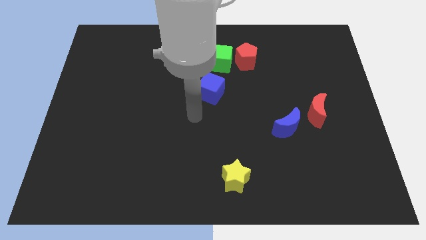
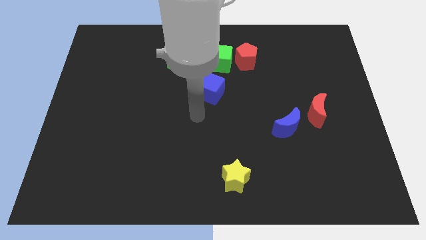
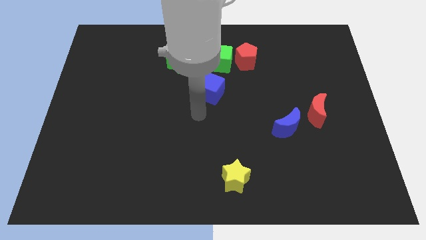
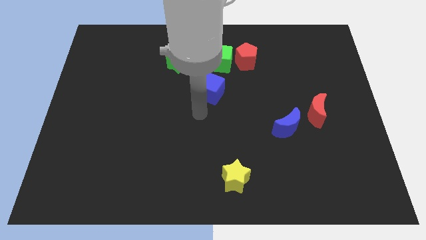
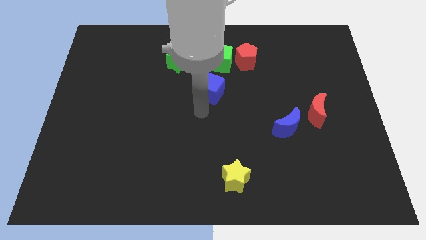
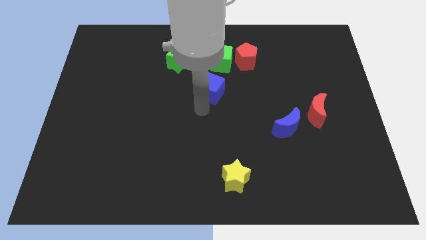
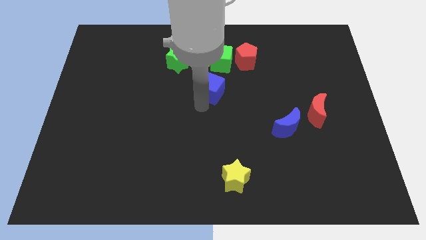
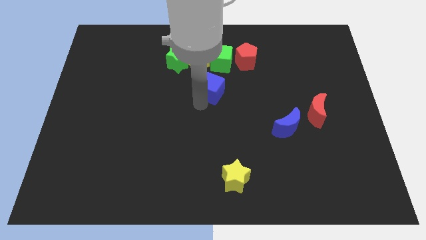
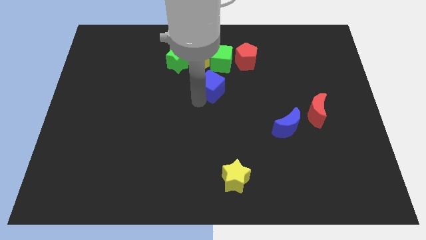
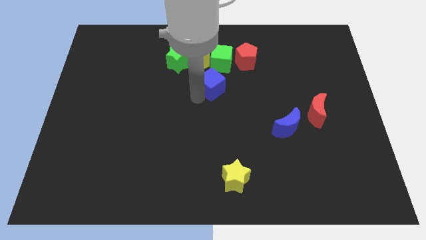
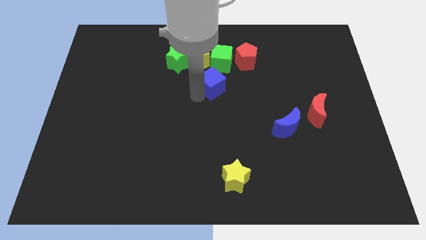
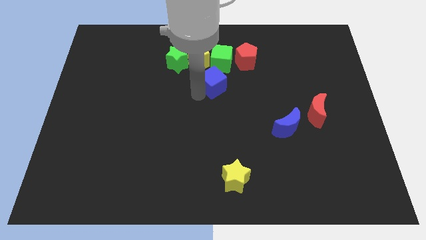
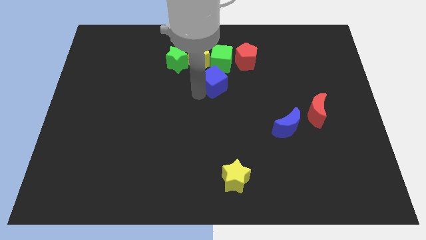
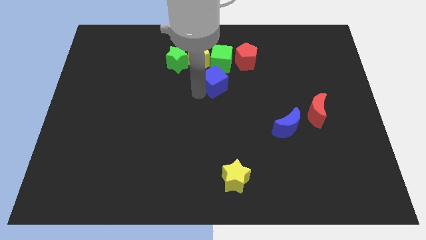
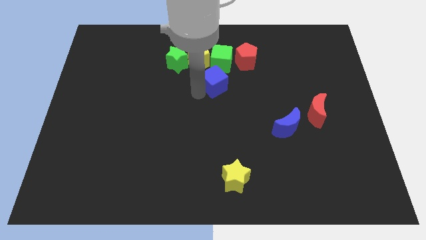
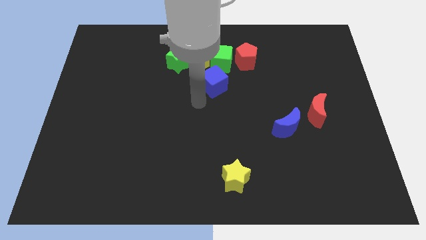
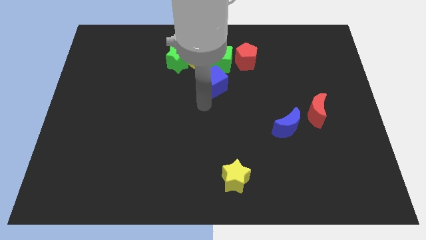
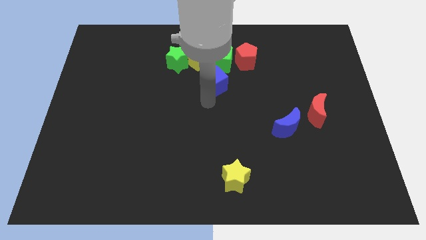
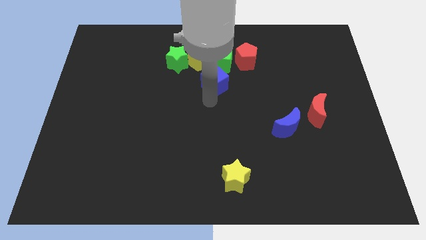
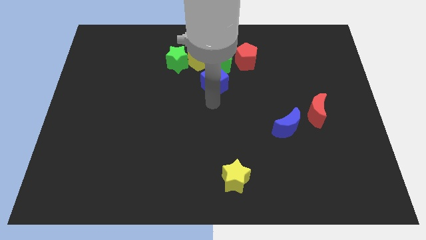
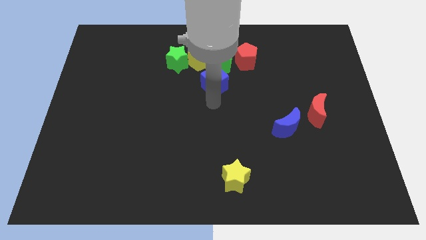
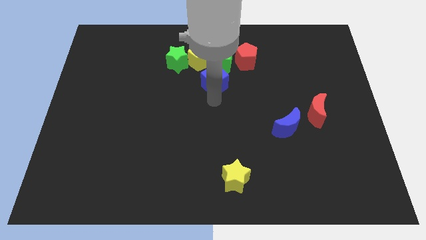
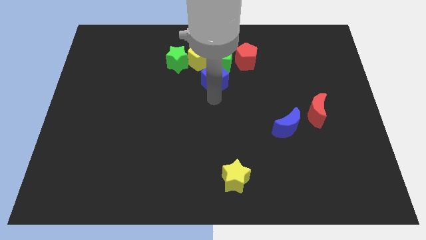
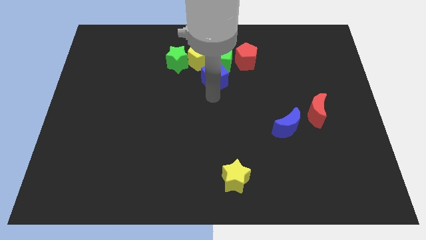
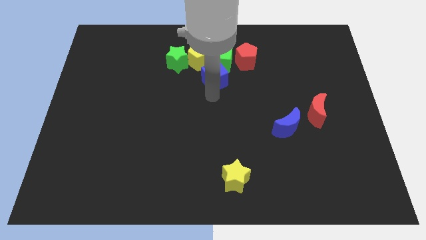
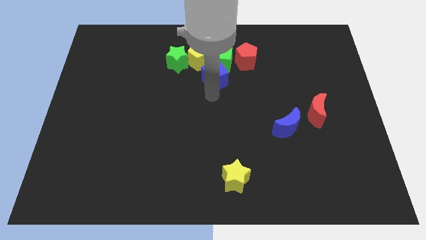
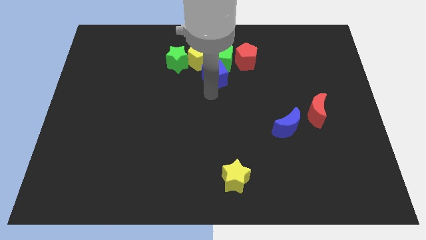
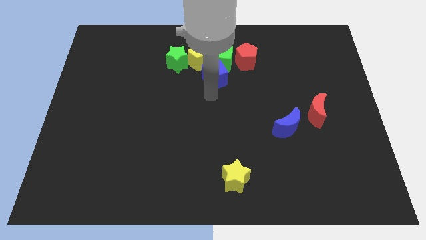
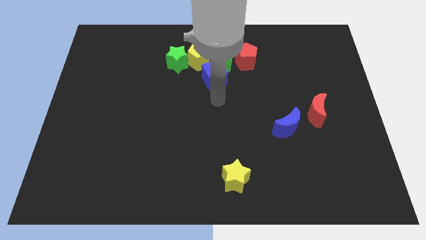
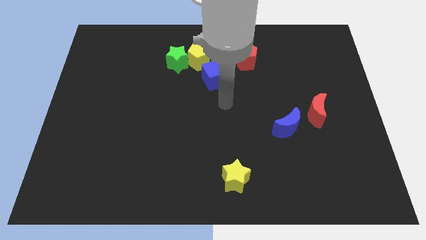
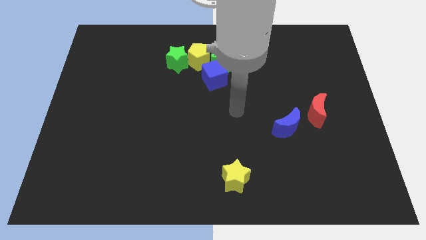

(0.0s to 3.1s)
push the blue cube into green cube

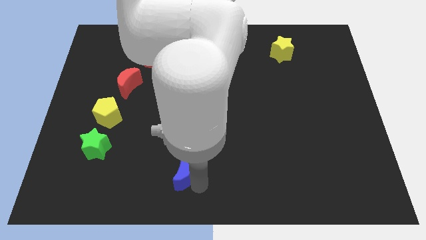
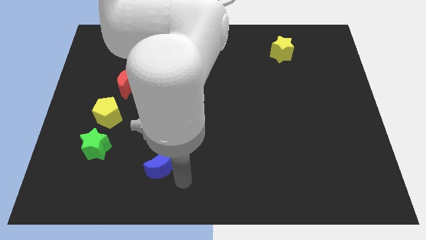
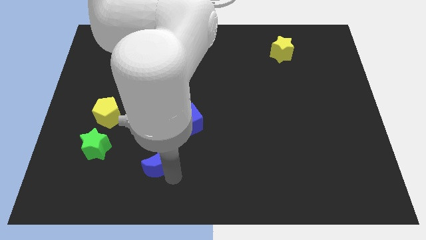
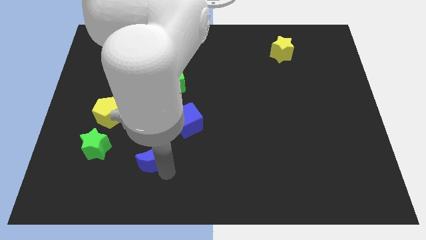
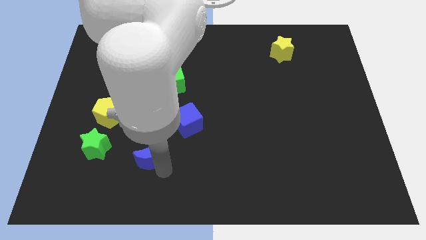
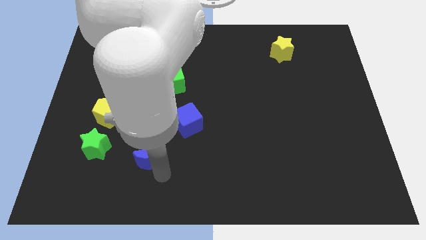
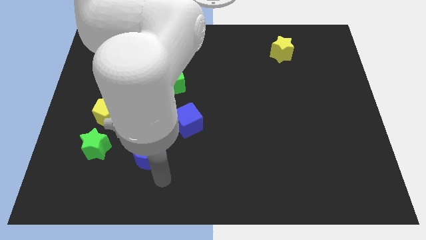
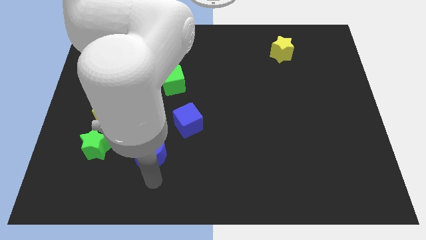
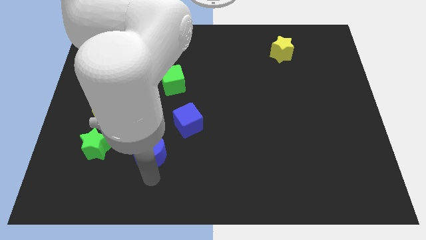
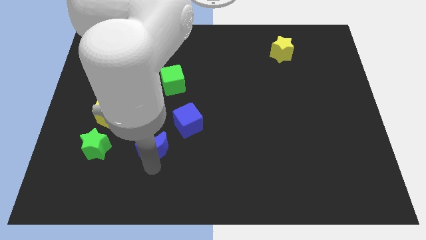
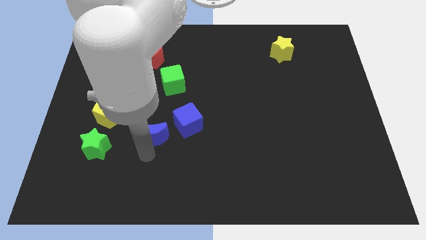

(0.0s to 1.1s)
move the blue moon between blue cube and green star

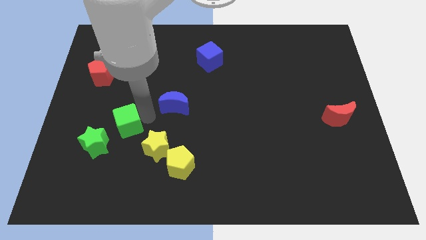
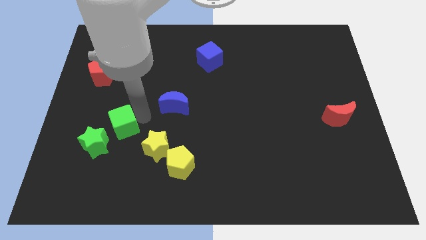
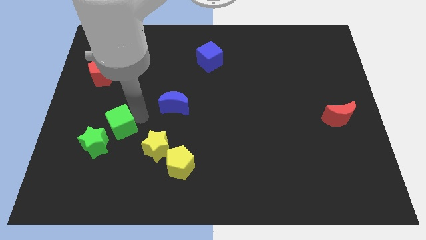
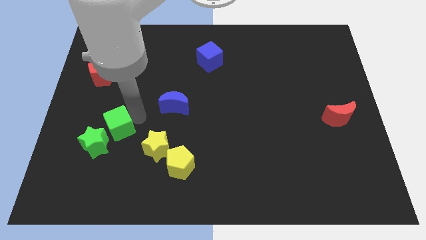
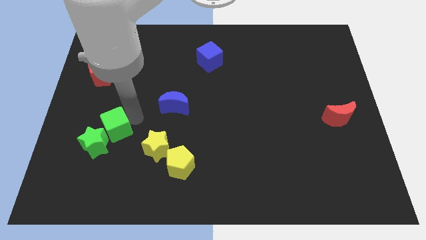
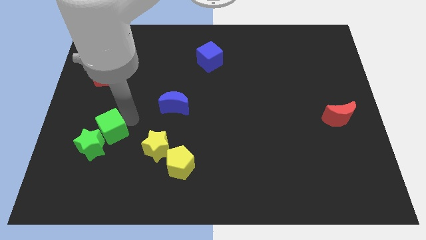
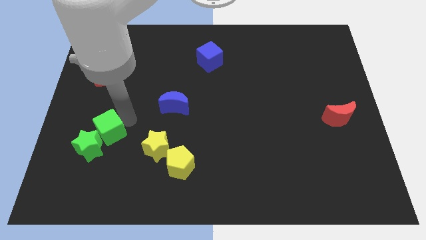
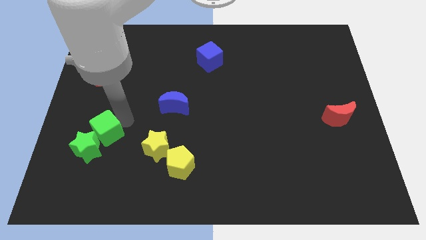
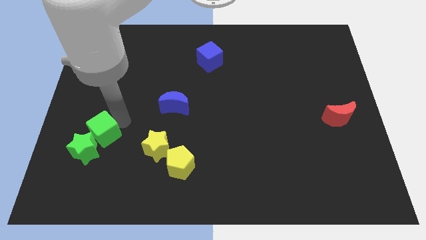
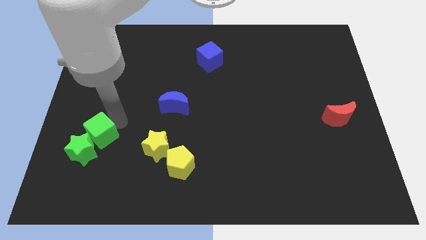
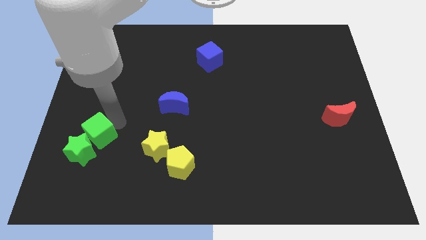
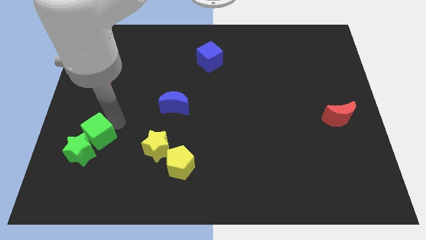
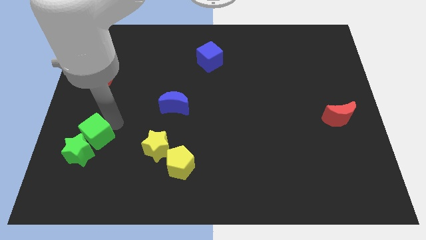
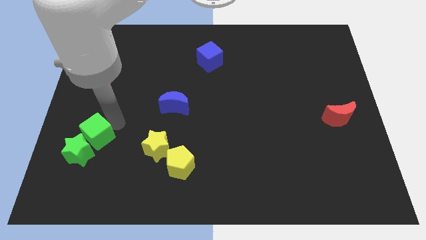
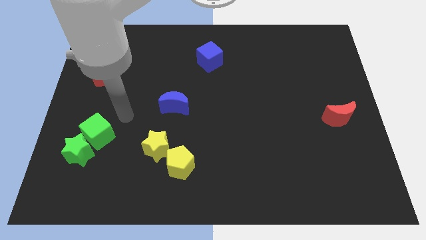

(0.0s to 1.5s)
move the green cube into the top of the green star

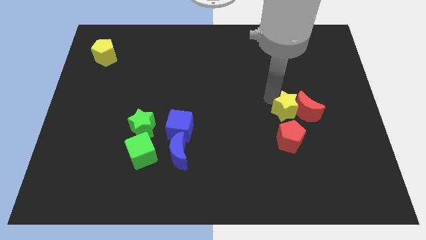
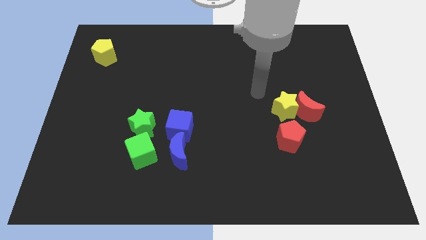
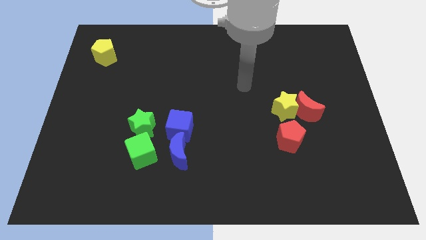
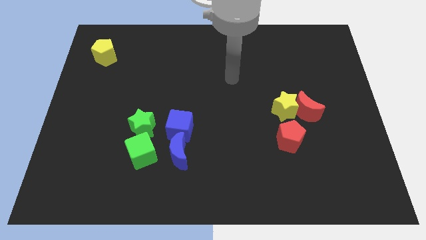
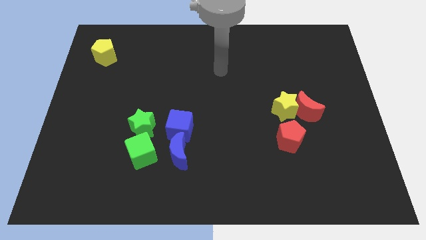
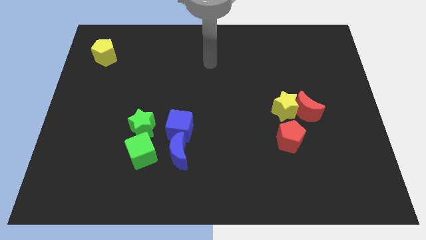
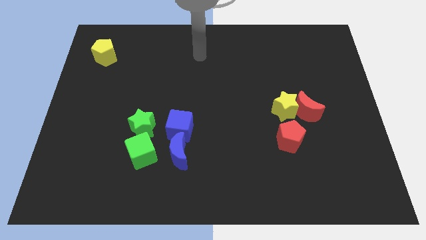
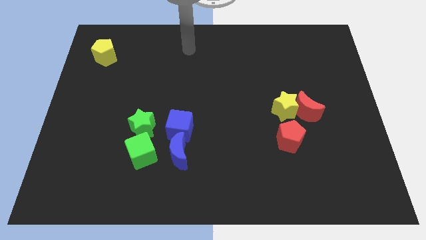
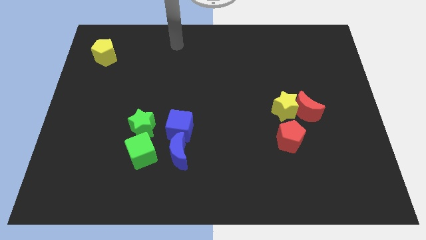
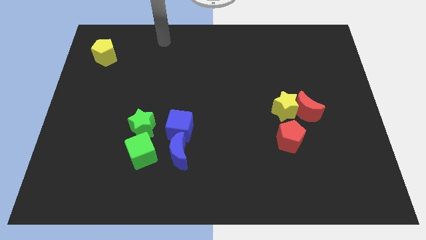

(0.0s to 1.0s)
go away from the yellow star

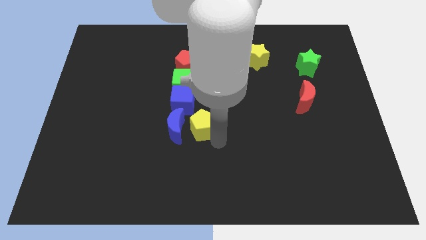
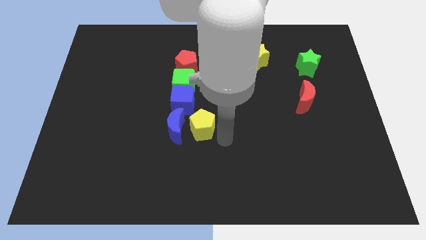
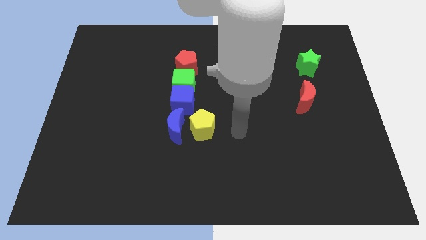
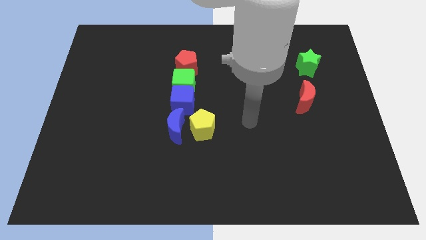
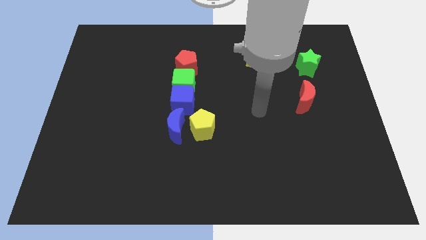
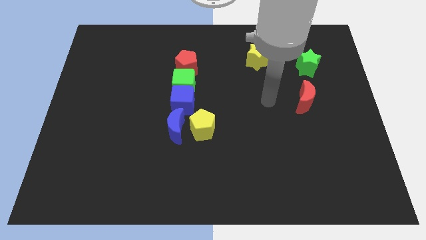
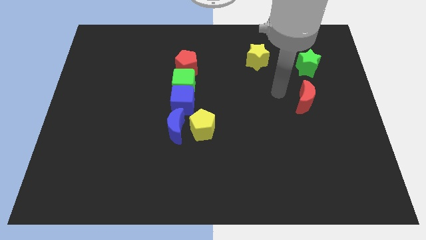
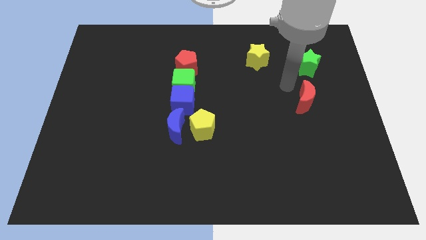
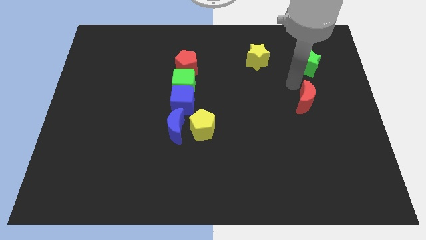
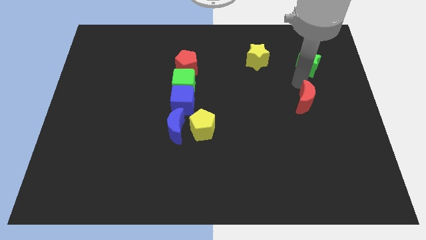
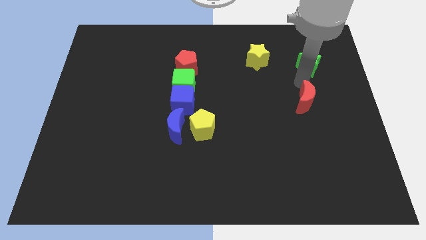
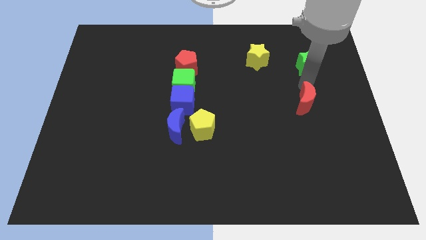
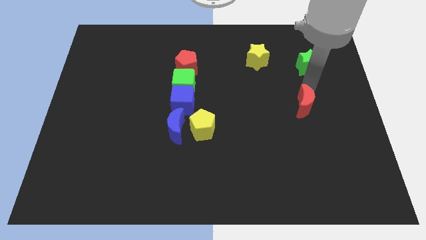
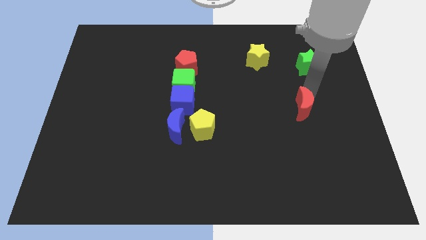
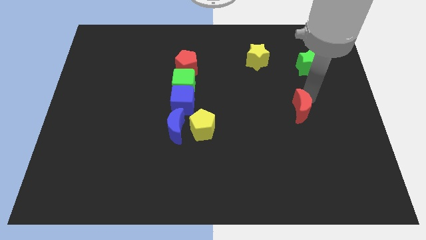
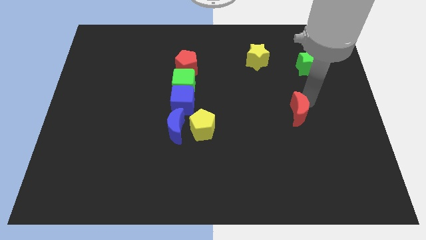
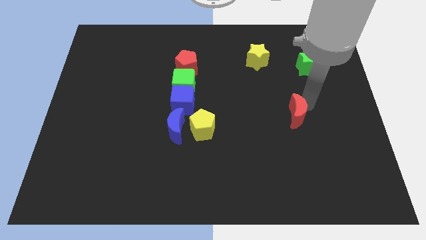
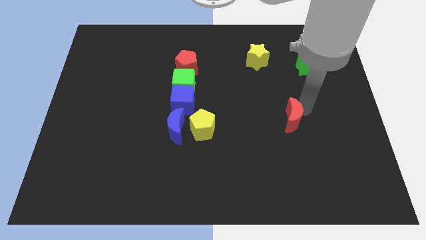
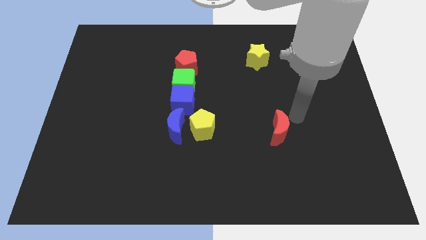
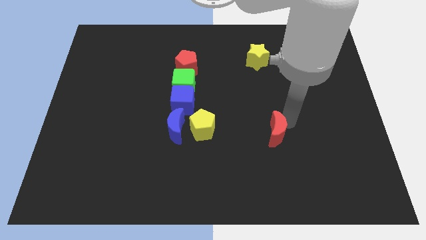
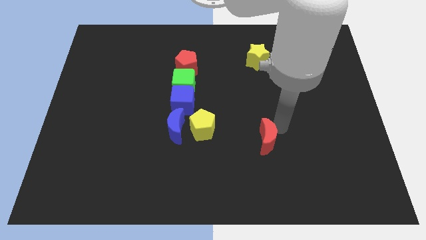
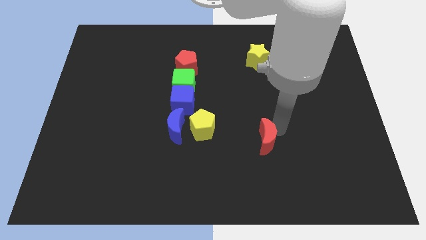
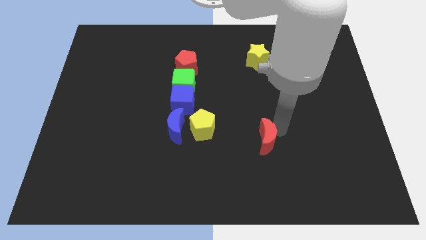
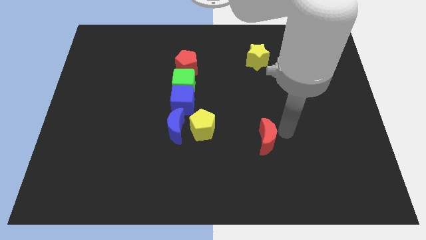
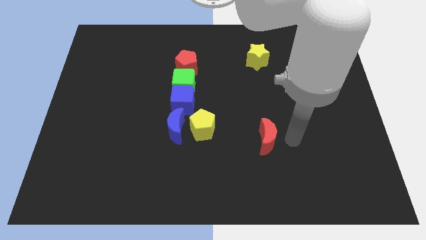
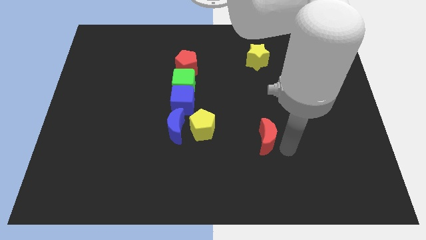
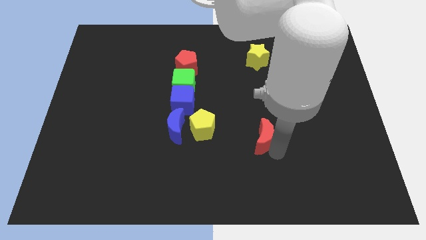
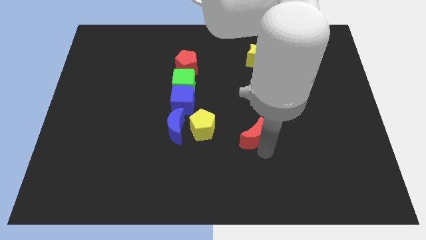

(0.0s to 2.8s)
separate red moon from green star
